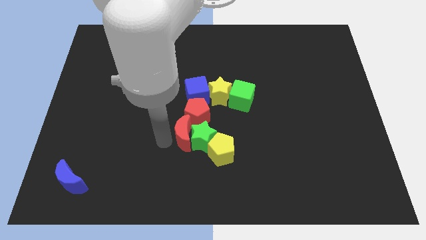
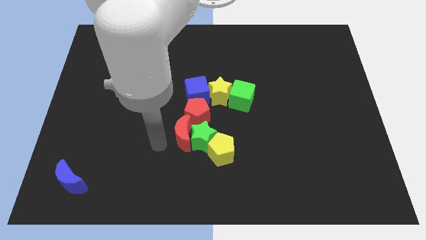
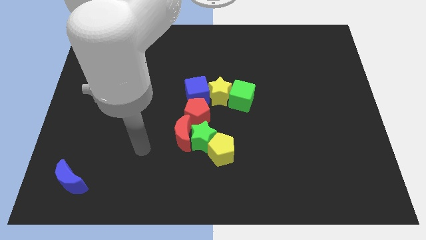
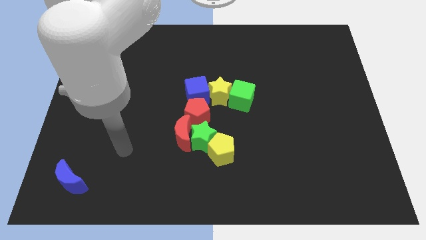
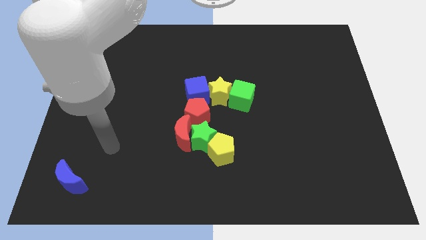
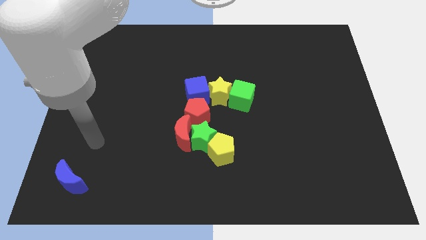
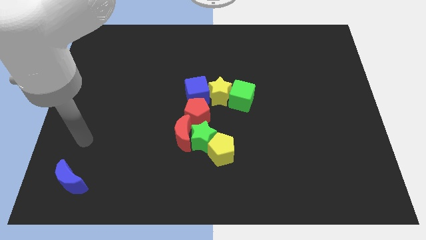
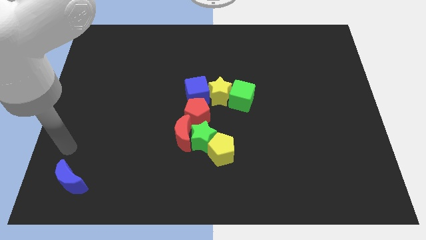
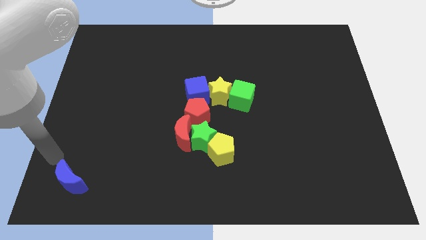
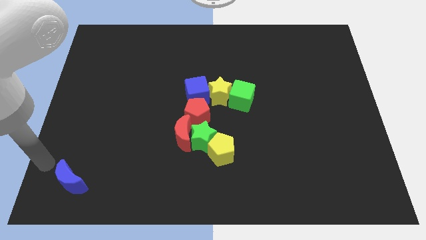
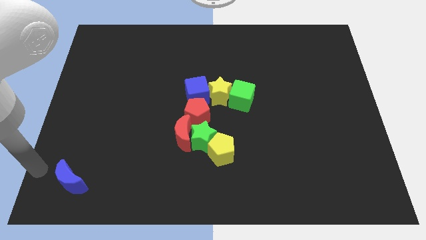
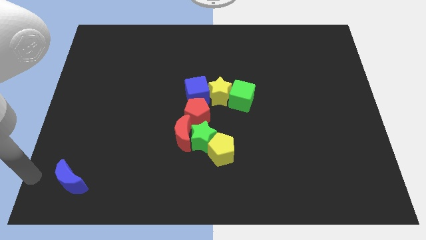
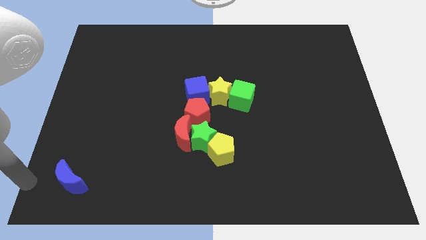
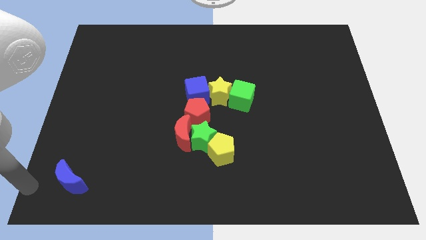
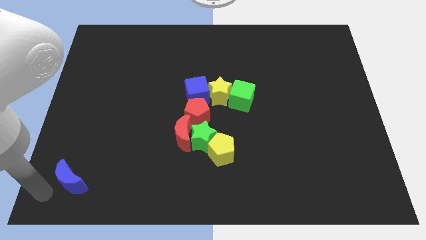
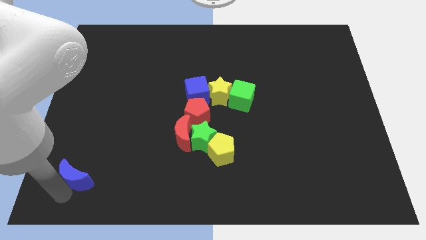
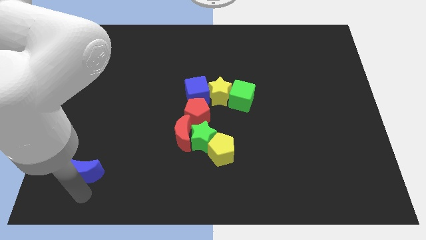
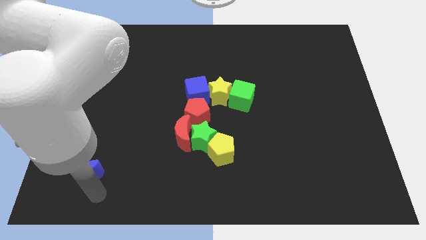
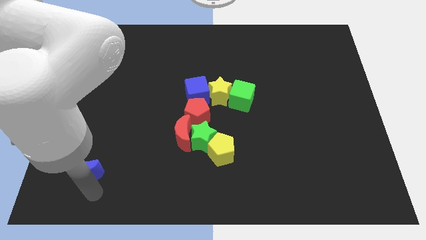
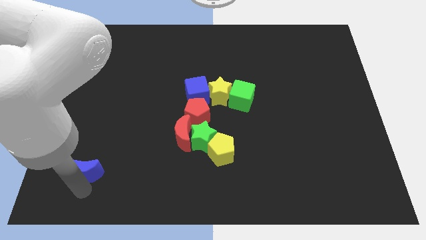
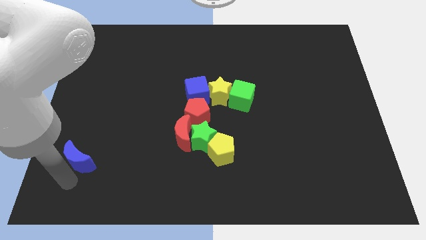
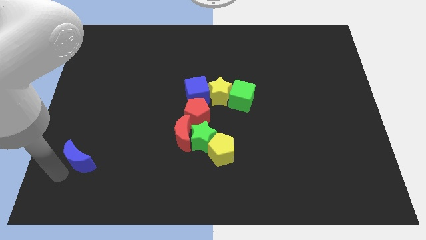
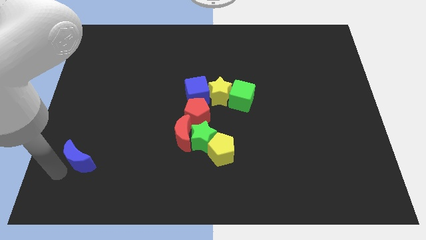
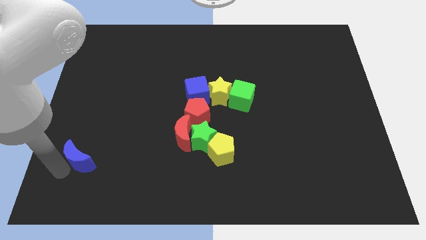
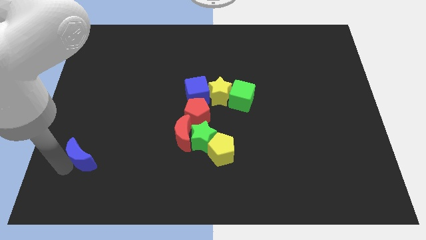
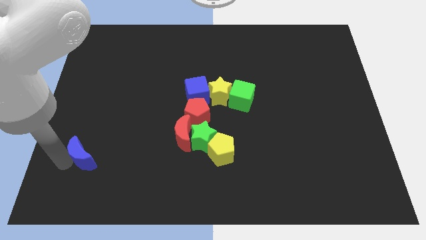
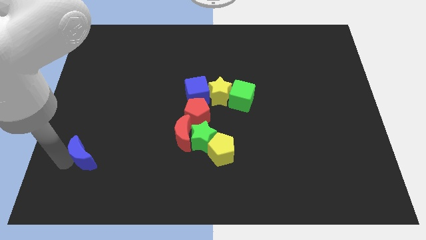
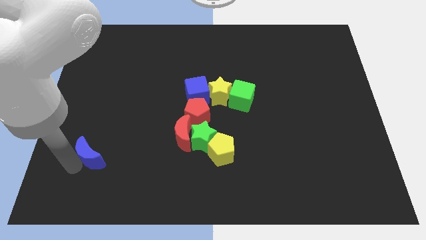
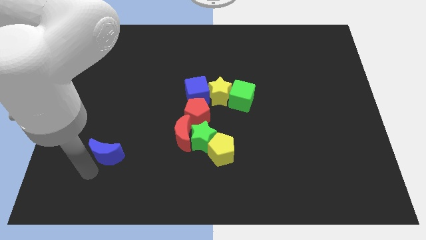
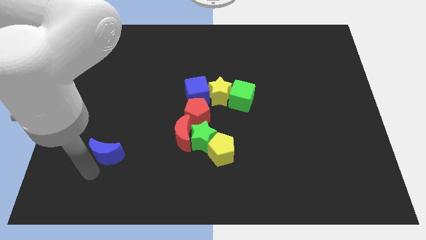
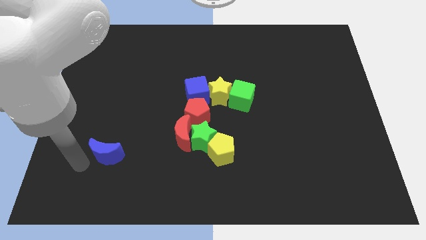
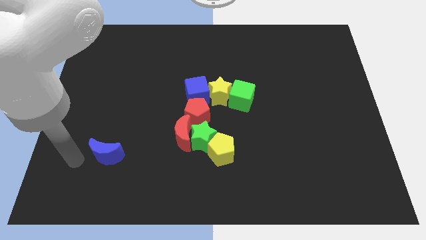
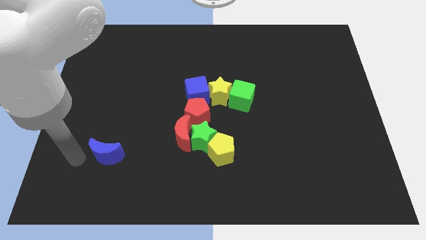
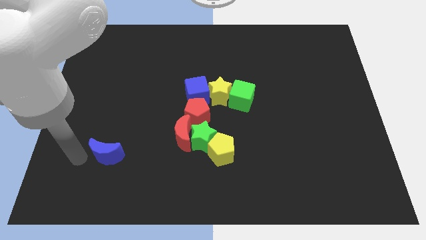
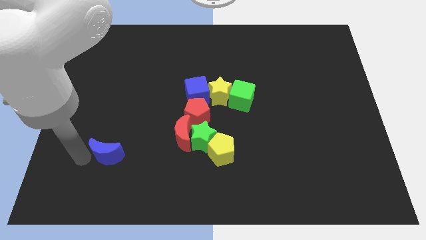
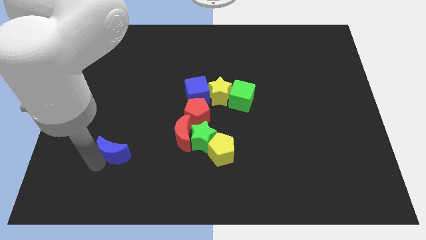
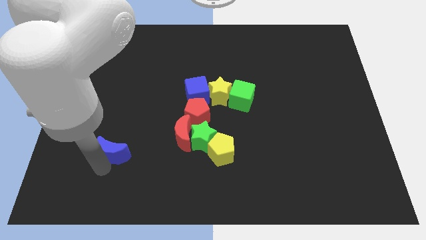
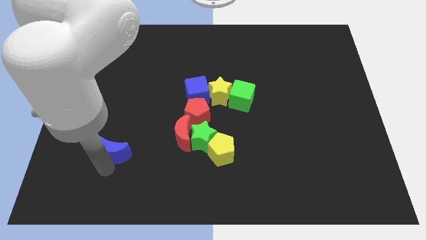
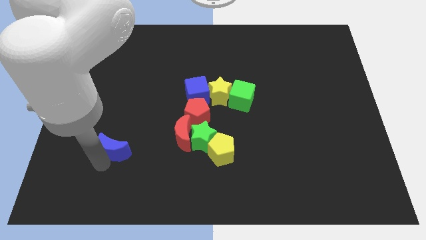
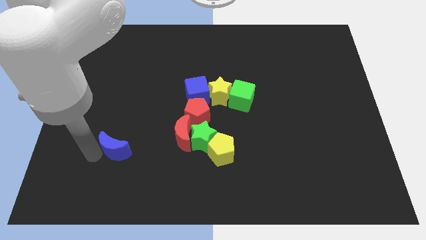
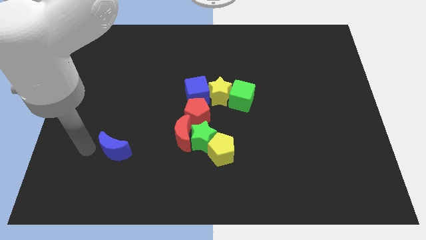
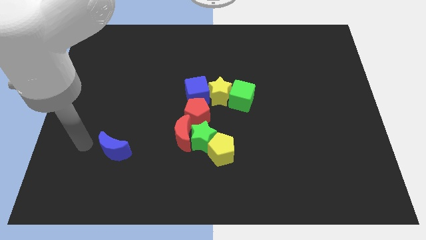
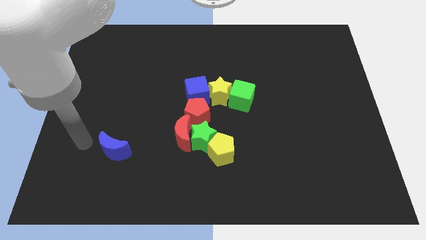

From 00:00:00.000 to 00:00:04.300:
place the blue moon left to the red moon

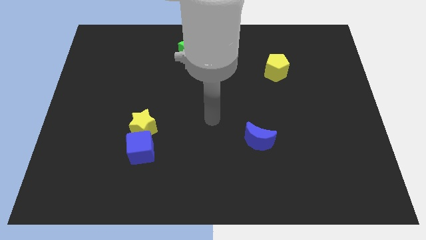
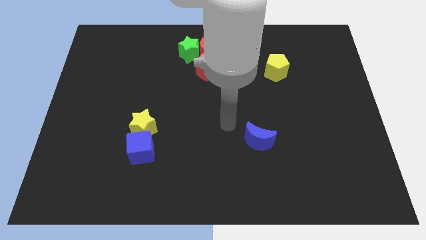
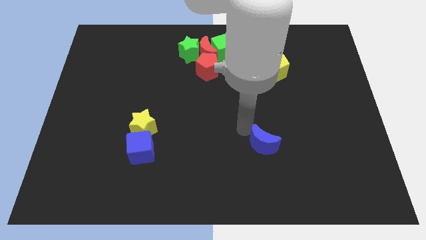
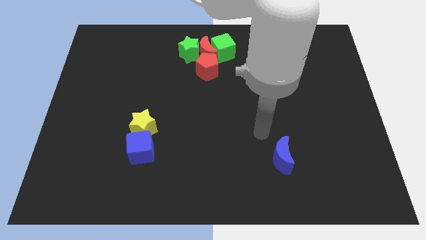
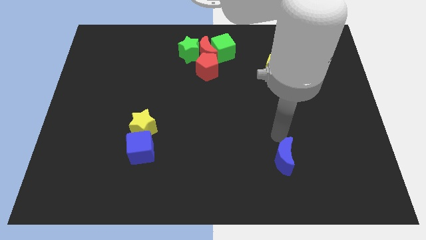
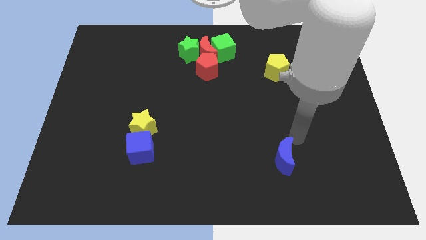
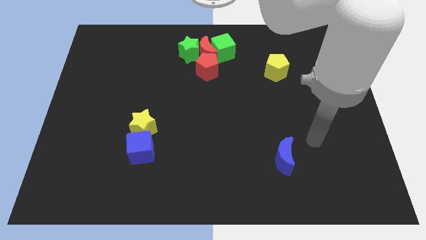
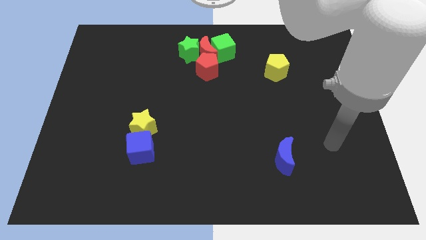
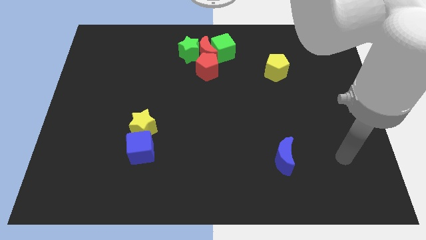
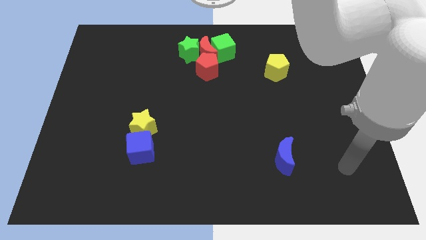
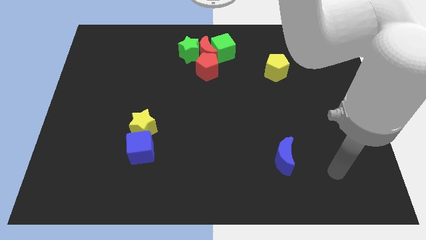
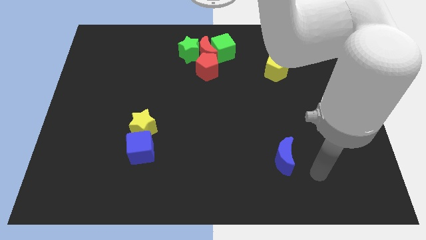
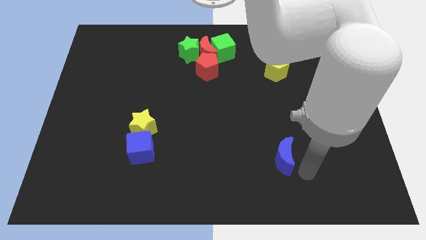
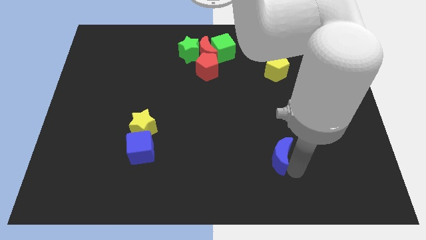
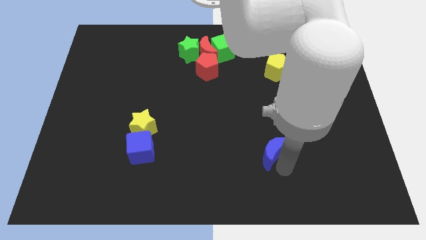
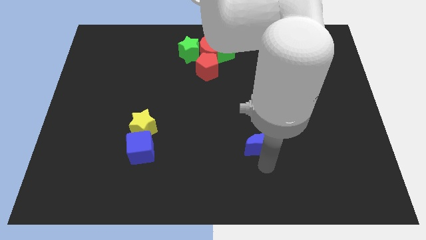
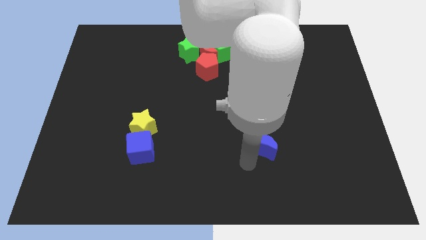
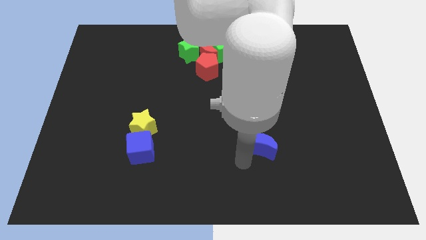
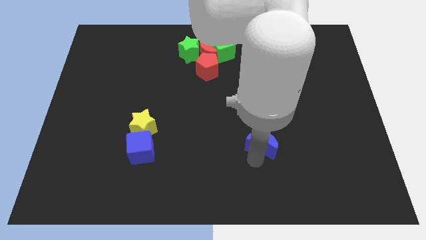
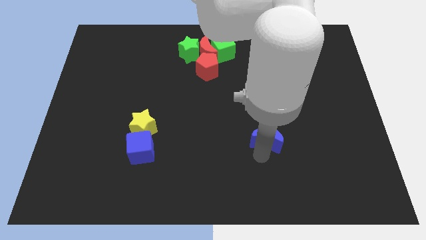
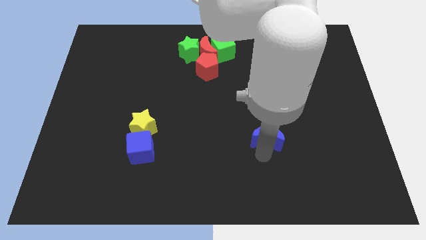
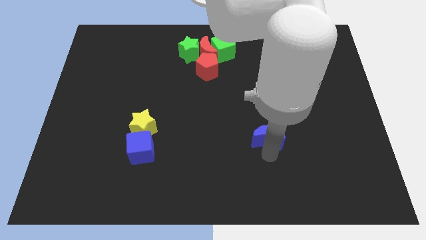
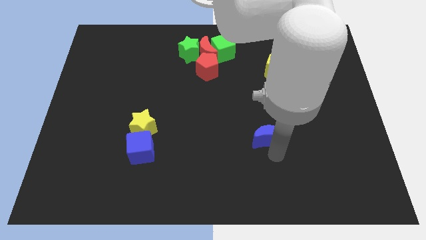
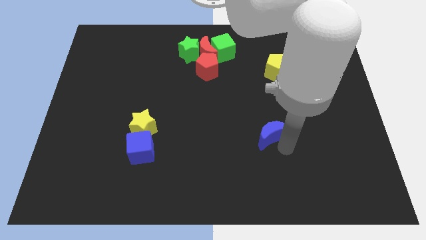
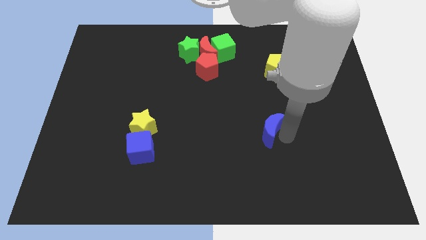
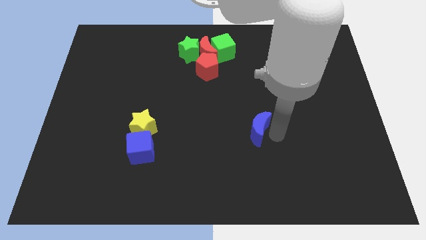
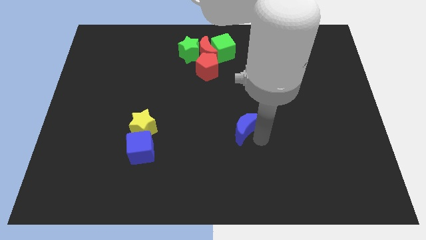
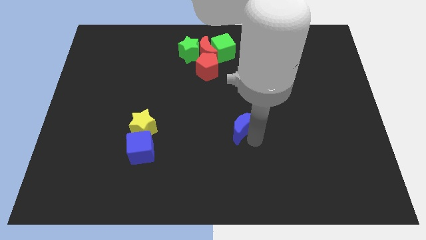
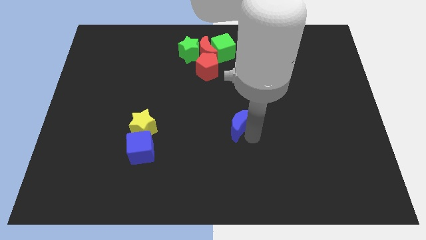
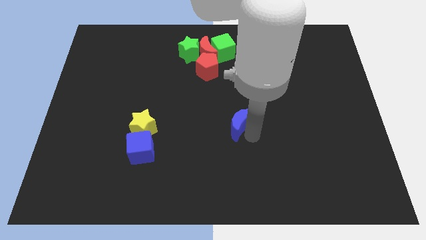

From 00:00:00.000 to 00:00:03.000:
move the blue moon diagonal below the yellow pentagon

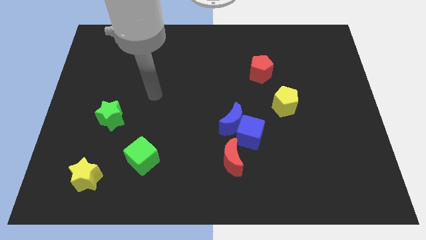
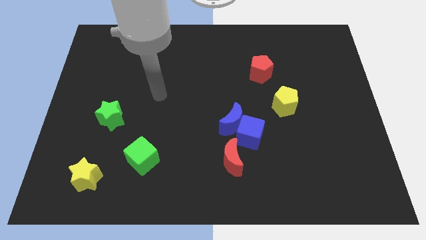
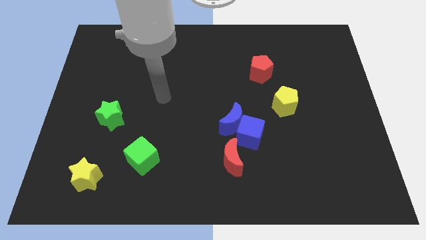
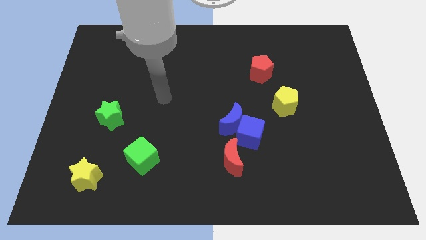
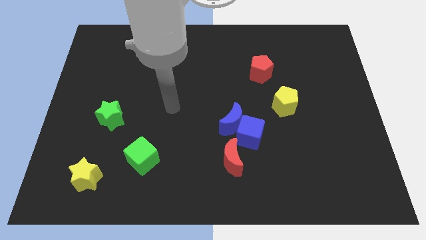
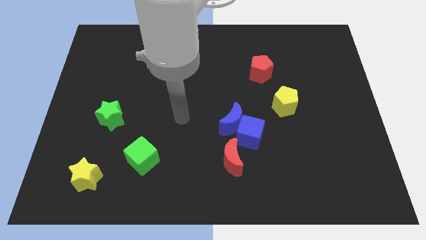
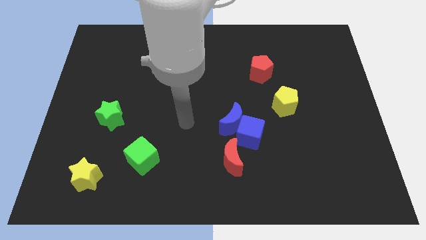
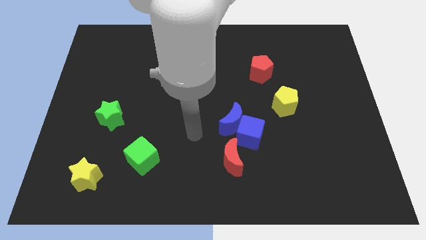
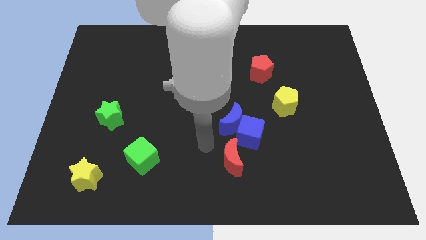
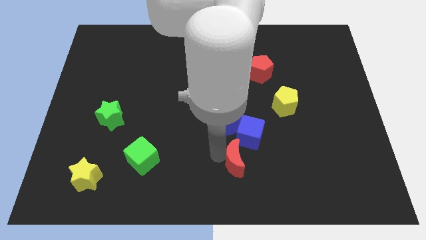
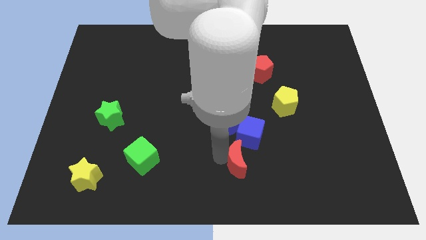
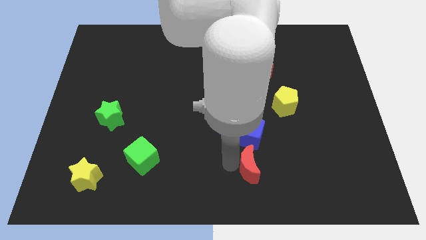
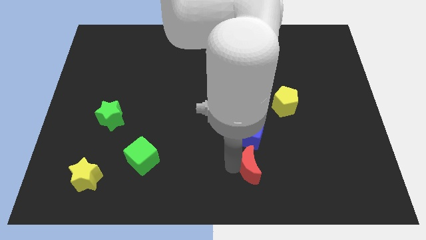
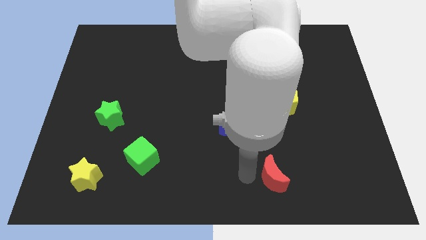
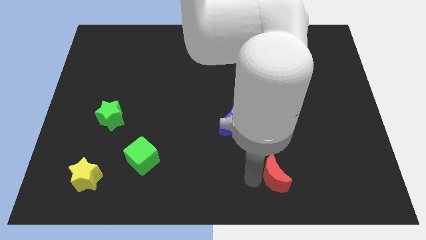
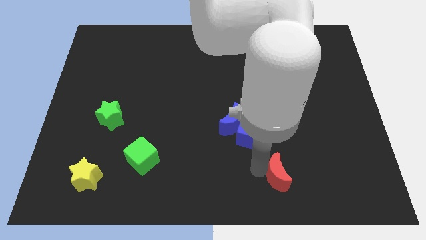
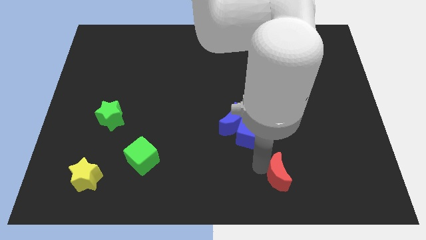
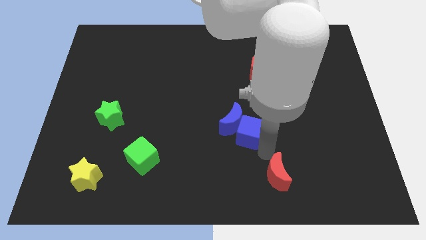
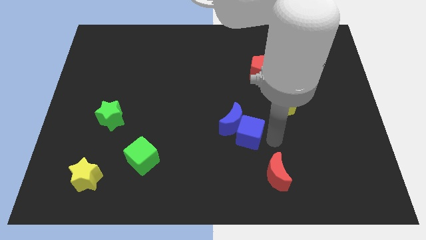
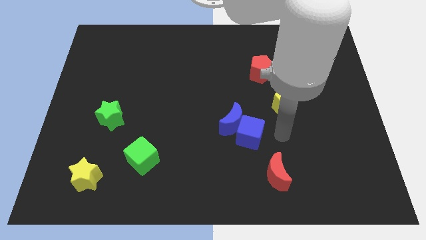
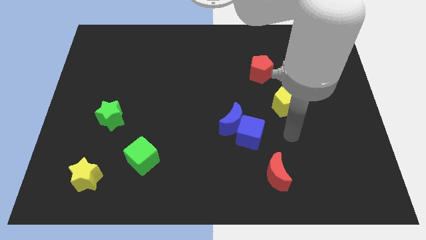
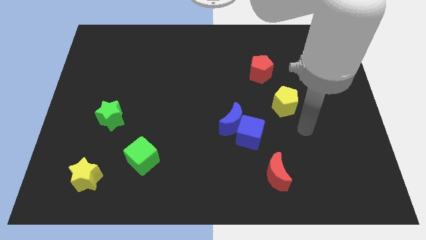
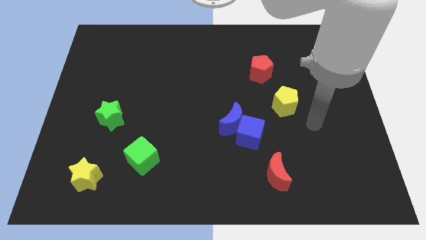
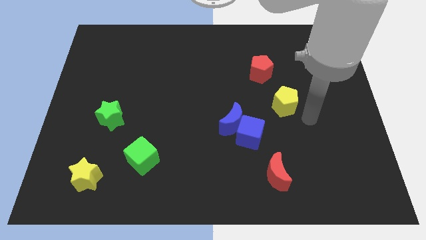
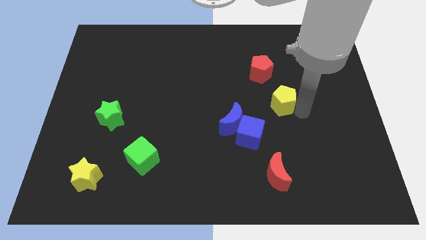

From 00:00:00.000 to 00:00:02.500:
move the yellow pentagon below the red pentagon
